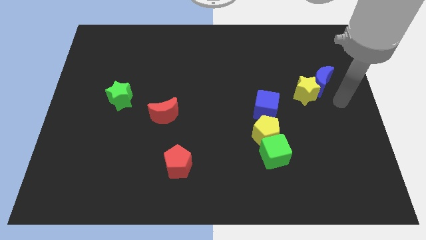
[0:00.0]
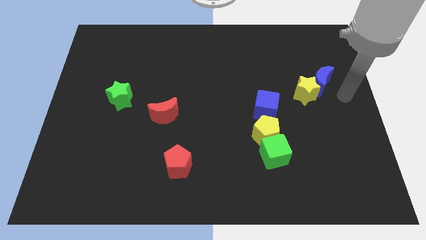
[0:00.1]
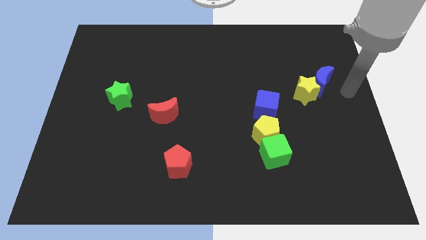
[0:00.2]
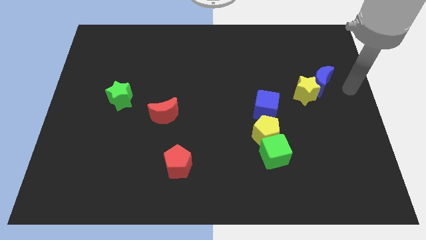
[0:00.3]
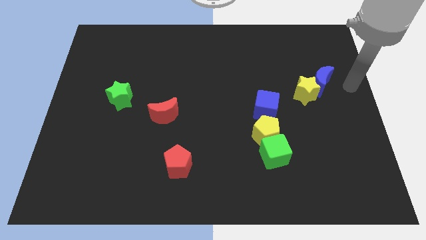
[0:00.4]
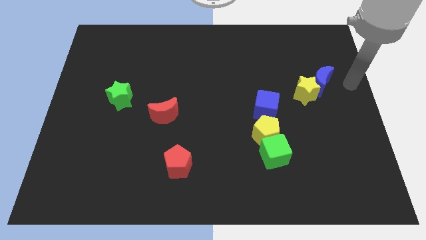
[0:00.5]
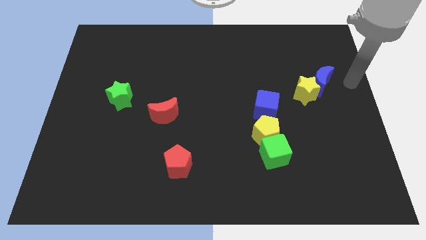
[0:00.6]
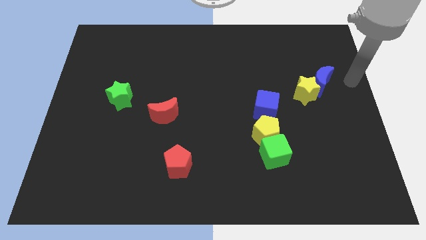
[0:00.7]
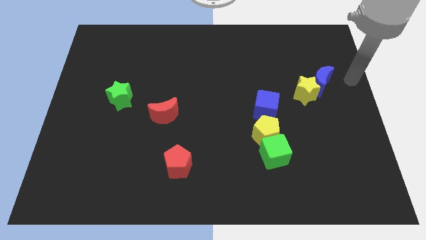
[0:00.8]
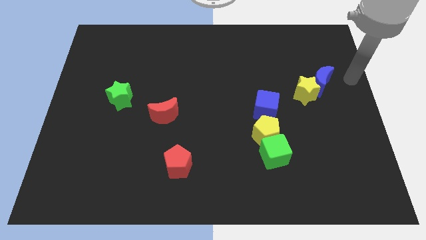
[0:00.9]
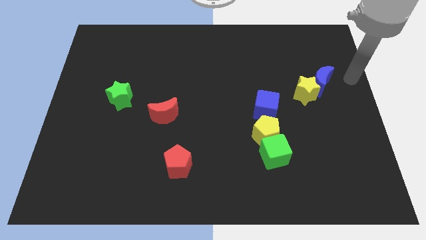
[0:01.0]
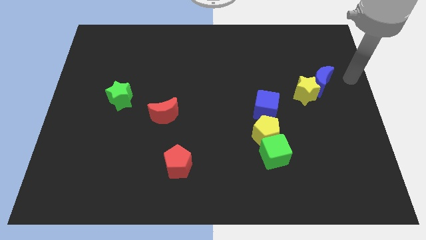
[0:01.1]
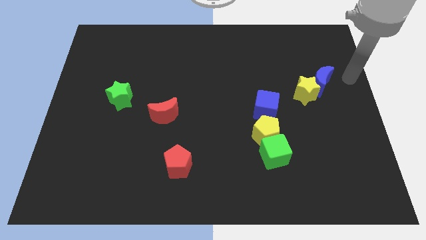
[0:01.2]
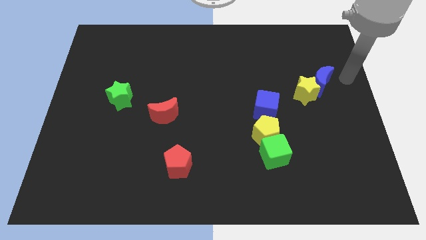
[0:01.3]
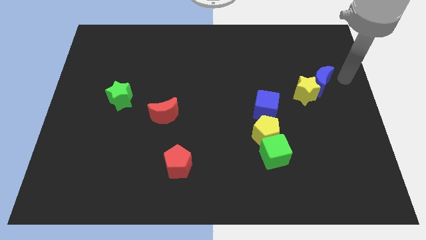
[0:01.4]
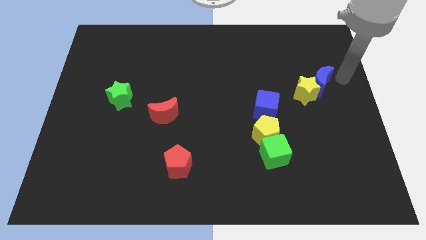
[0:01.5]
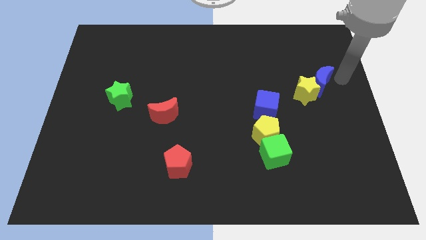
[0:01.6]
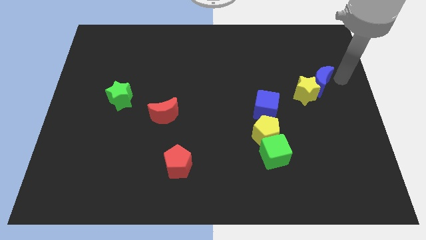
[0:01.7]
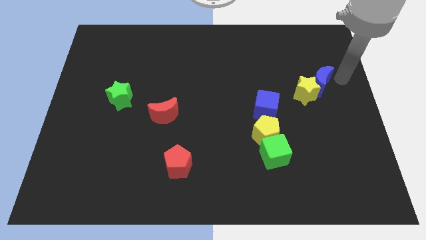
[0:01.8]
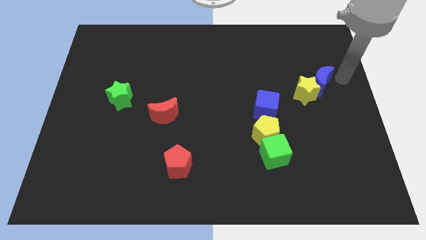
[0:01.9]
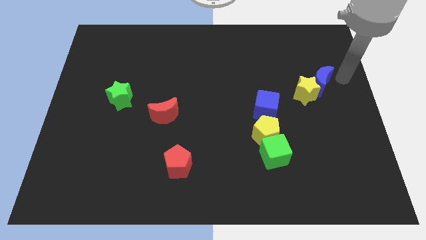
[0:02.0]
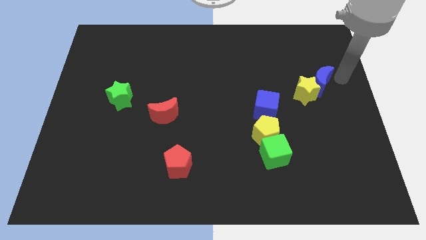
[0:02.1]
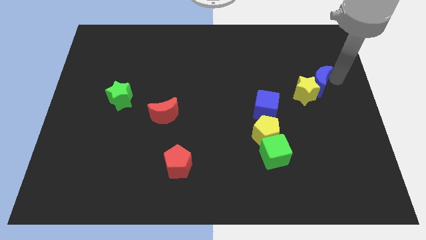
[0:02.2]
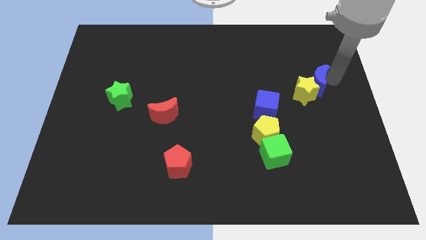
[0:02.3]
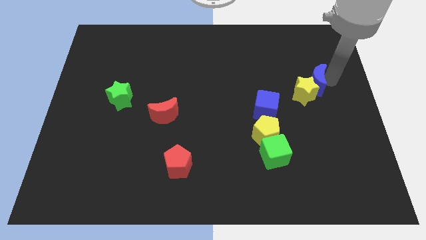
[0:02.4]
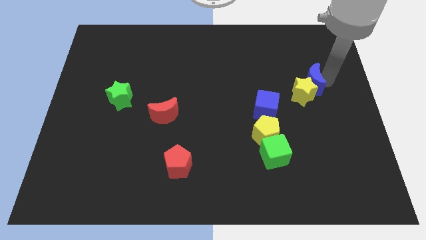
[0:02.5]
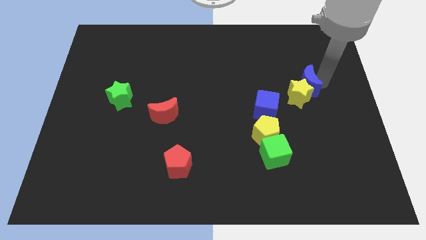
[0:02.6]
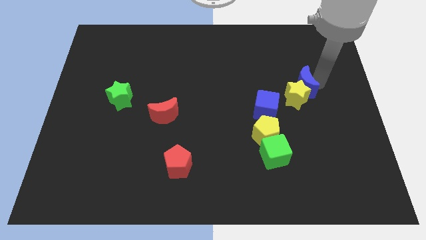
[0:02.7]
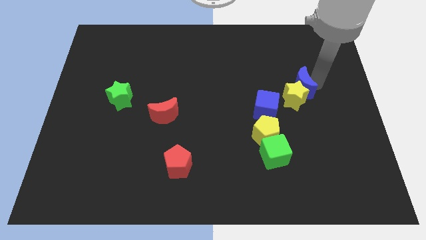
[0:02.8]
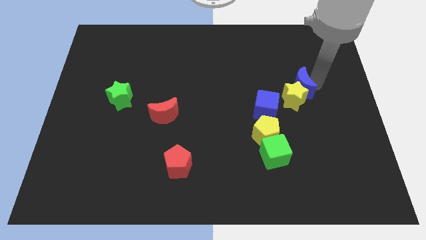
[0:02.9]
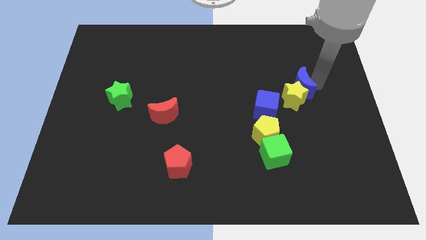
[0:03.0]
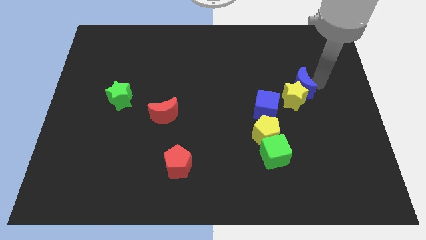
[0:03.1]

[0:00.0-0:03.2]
push the blue crescent to the top right of the yellow star

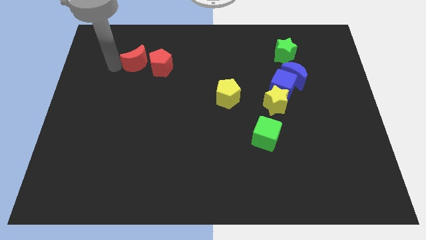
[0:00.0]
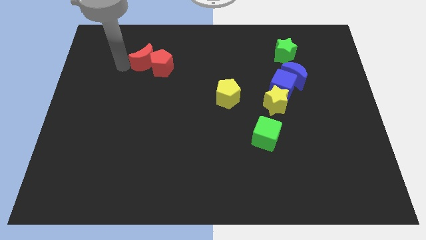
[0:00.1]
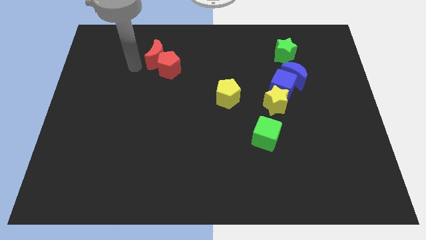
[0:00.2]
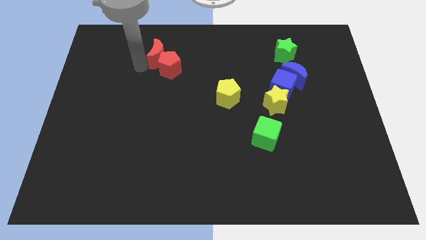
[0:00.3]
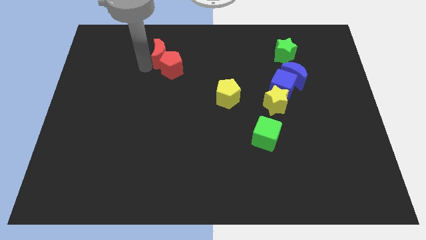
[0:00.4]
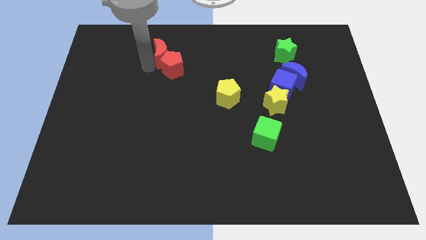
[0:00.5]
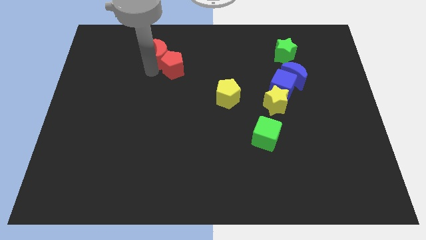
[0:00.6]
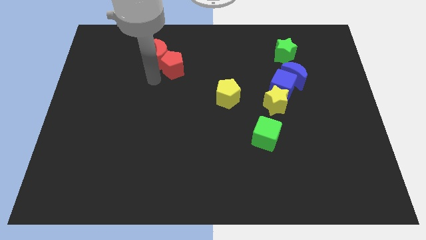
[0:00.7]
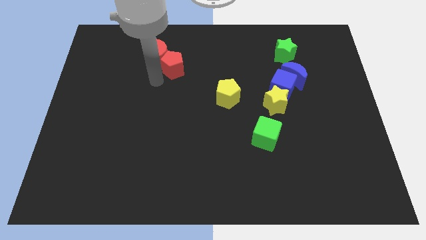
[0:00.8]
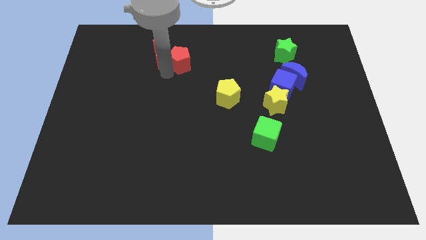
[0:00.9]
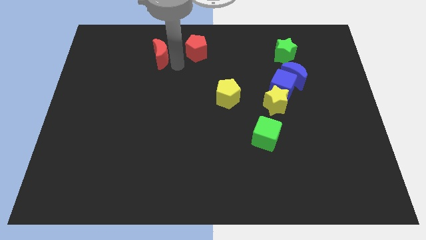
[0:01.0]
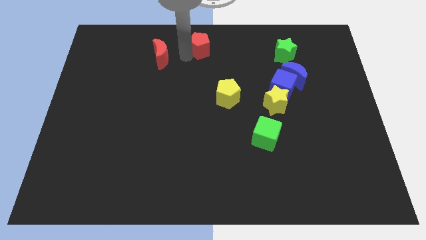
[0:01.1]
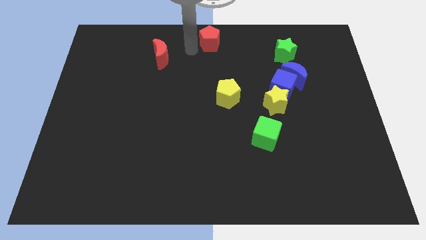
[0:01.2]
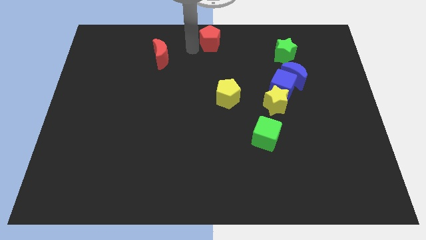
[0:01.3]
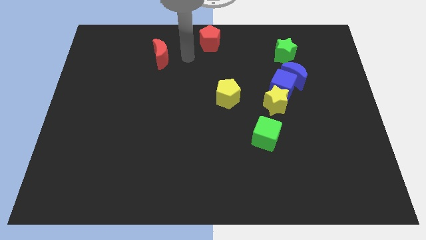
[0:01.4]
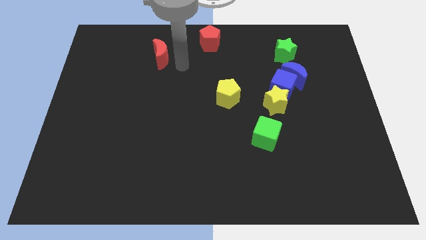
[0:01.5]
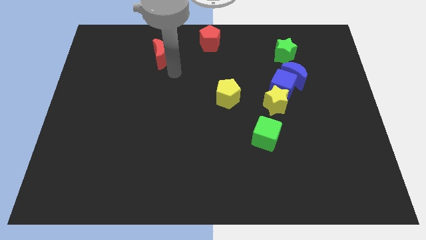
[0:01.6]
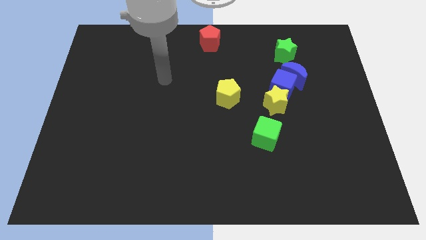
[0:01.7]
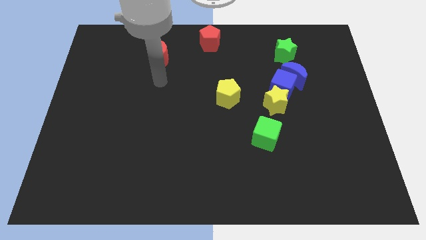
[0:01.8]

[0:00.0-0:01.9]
move the red pentagon to the top center of the board

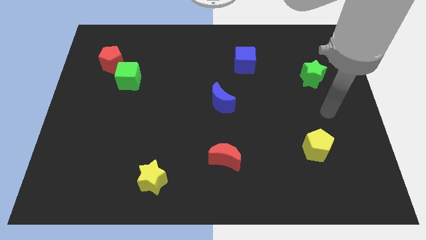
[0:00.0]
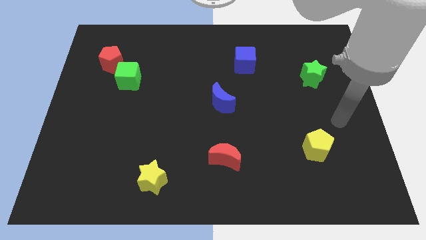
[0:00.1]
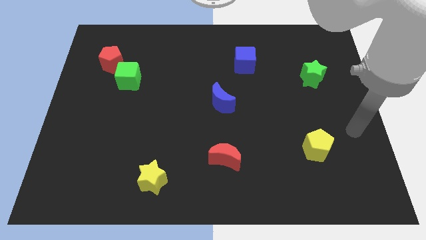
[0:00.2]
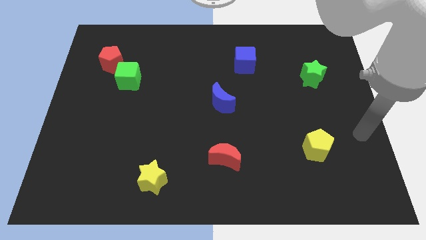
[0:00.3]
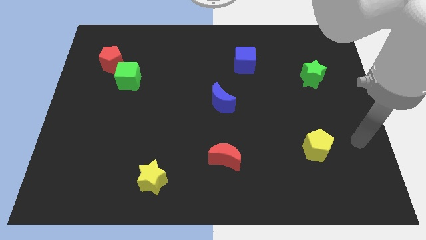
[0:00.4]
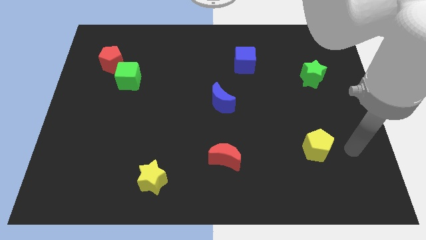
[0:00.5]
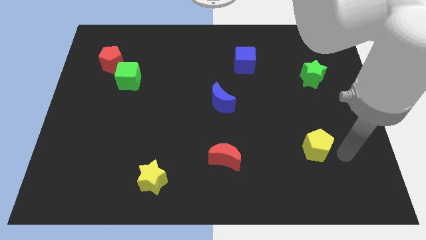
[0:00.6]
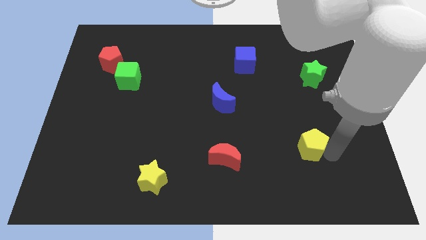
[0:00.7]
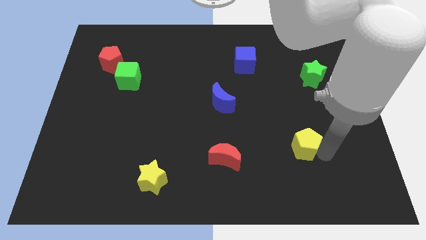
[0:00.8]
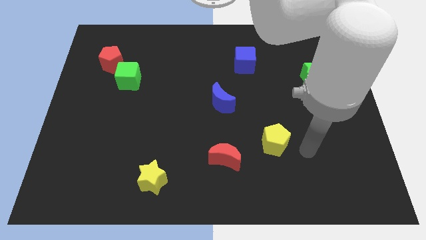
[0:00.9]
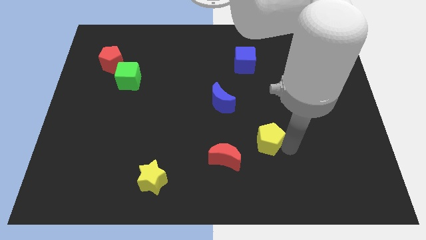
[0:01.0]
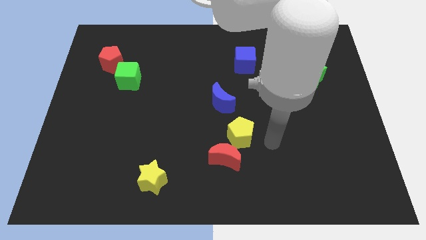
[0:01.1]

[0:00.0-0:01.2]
move the yellow pentagon to the left of the board

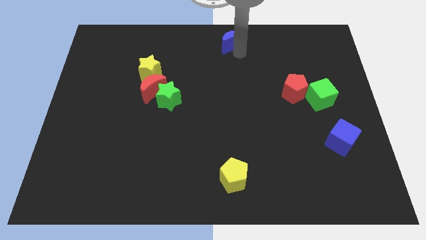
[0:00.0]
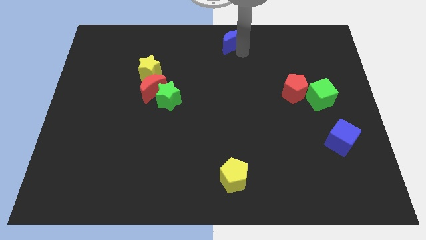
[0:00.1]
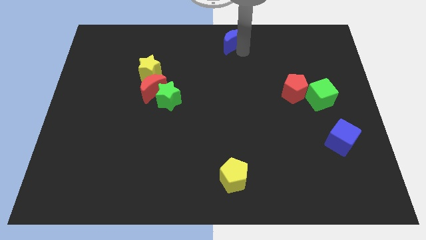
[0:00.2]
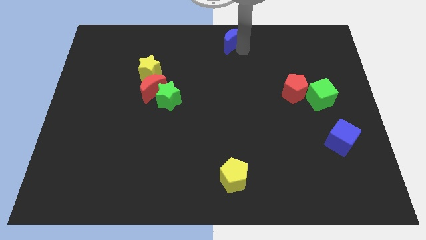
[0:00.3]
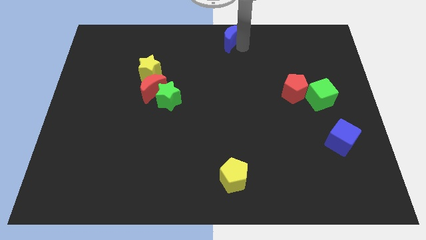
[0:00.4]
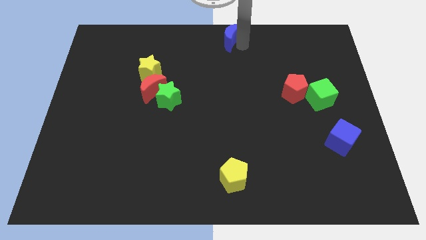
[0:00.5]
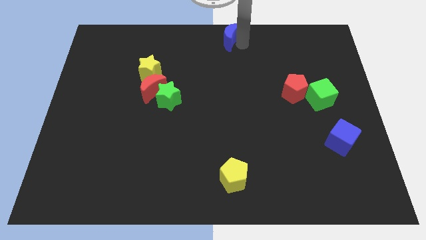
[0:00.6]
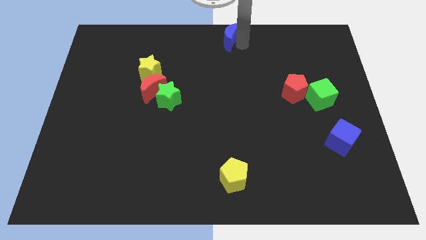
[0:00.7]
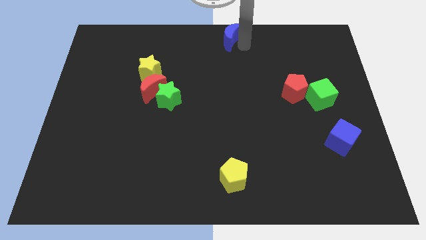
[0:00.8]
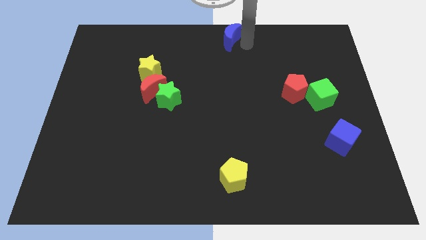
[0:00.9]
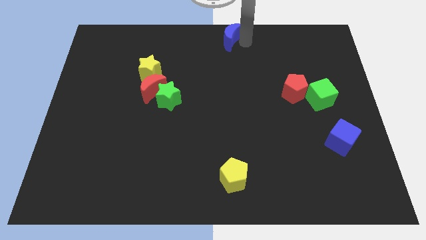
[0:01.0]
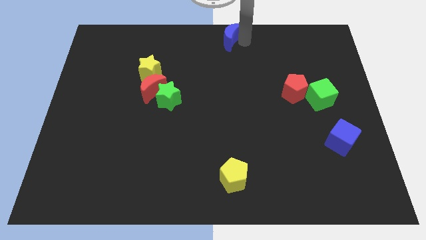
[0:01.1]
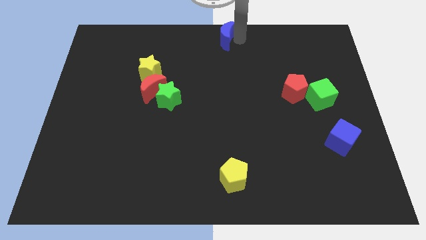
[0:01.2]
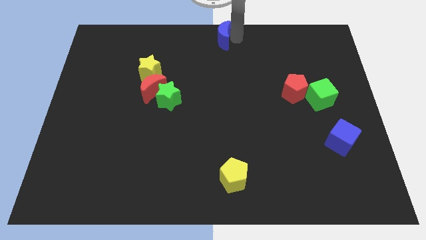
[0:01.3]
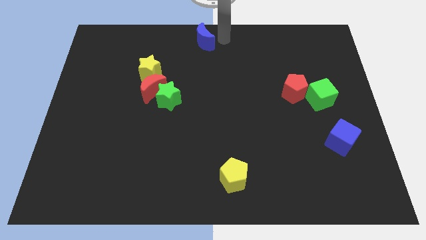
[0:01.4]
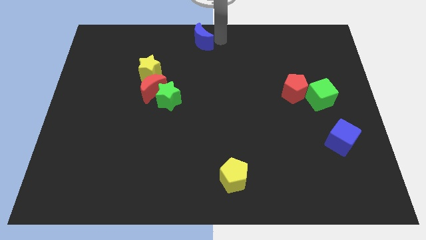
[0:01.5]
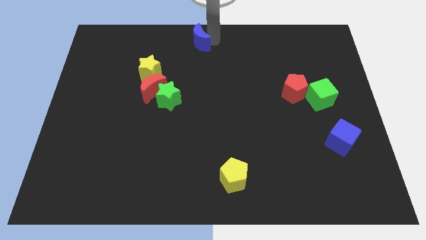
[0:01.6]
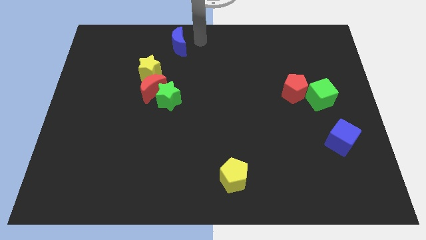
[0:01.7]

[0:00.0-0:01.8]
move the blue moon towards the left side

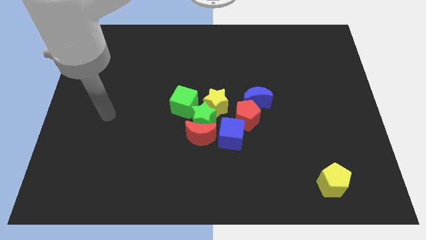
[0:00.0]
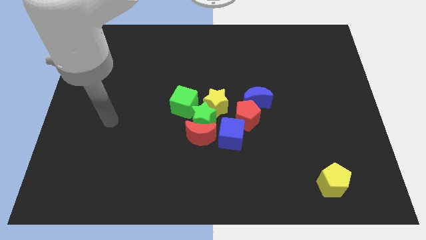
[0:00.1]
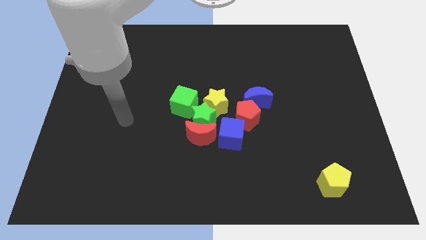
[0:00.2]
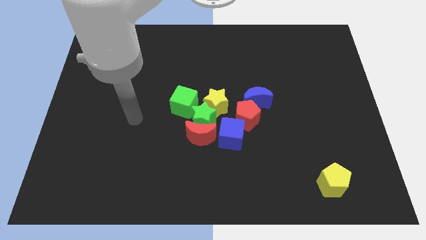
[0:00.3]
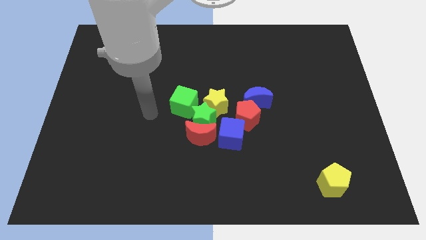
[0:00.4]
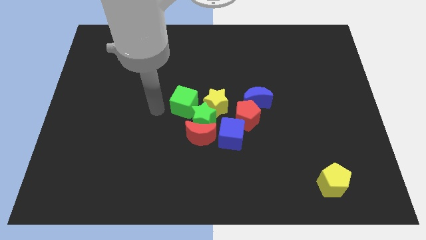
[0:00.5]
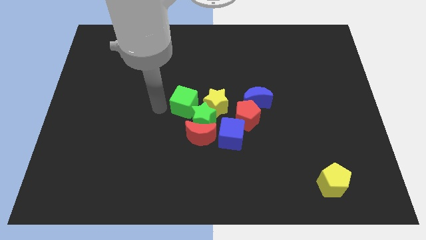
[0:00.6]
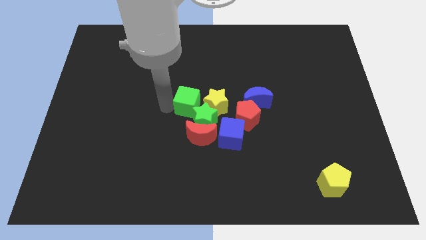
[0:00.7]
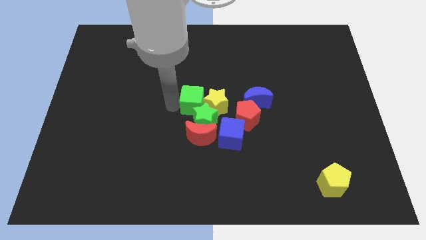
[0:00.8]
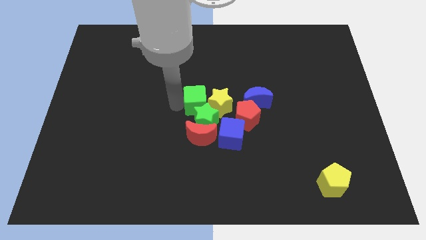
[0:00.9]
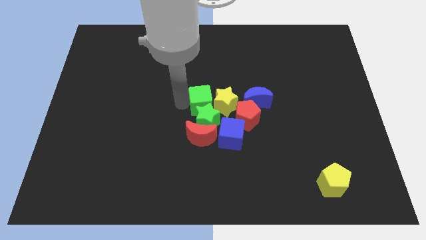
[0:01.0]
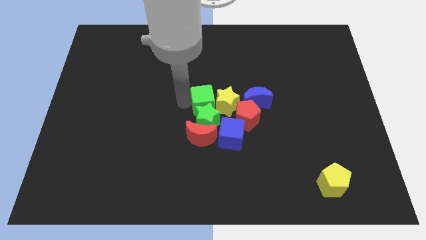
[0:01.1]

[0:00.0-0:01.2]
move the green cube close to the yellow star
